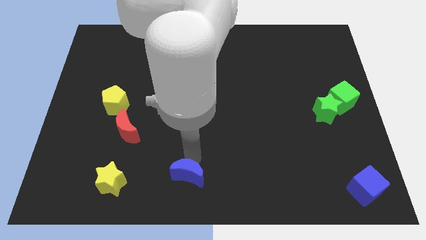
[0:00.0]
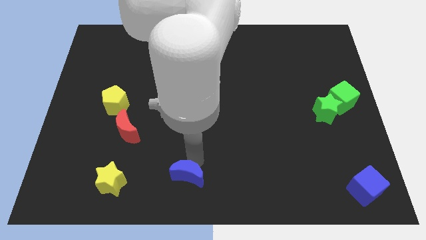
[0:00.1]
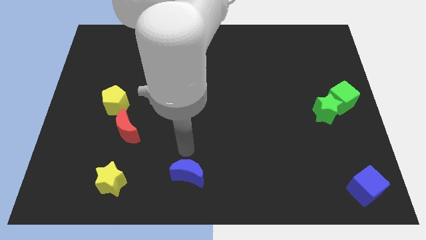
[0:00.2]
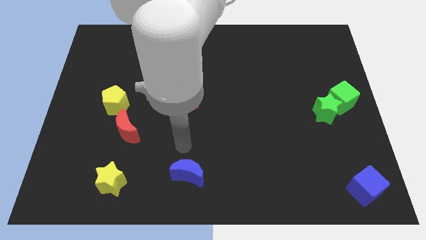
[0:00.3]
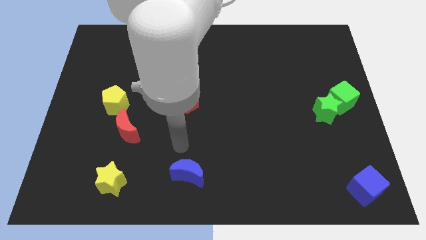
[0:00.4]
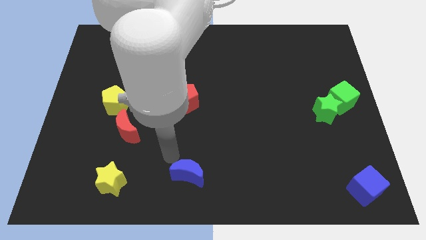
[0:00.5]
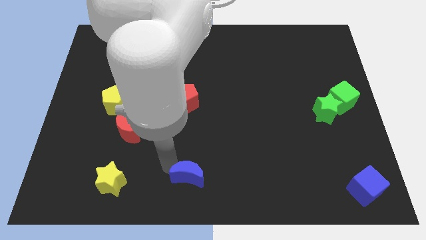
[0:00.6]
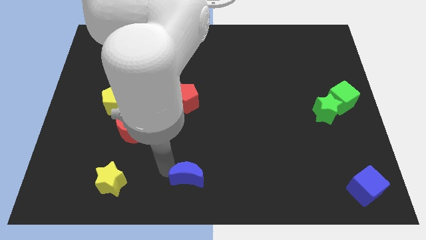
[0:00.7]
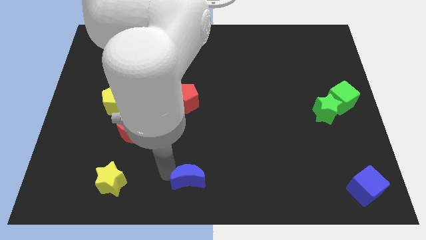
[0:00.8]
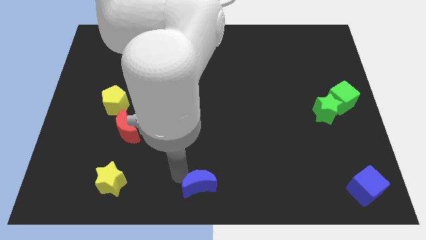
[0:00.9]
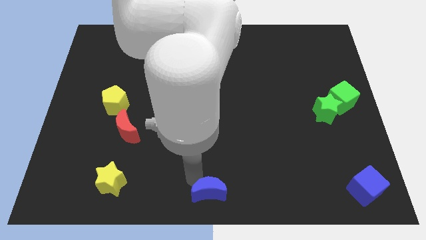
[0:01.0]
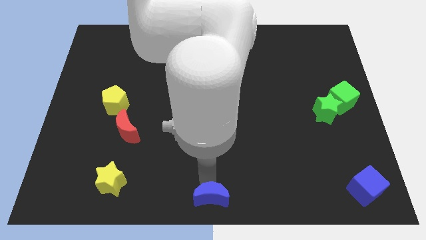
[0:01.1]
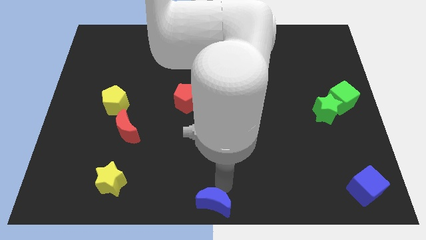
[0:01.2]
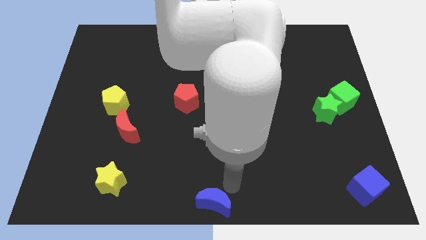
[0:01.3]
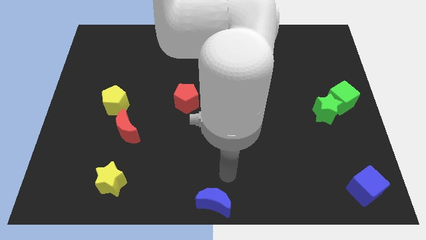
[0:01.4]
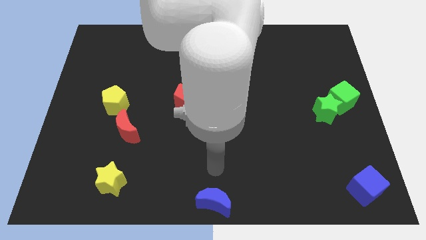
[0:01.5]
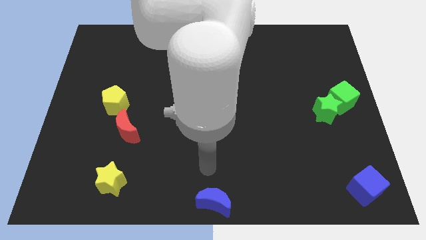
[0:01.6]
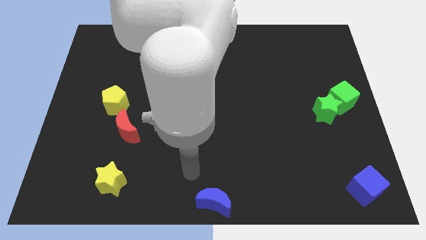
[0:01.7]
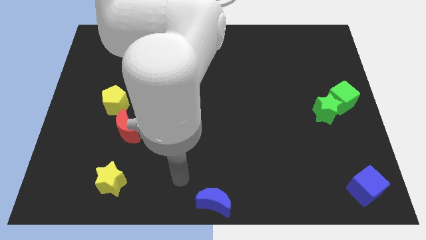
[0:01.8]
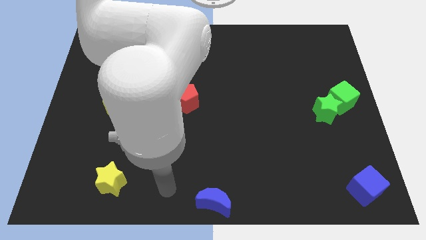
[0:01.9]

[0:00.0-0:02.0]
move the blue crescent to the bottom center of the board

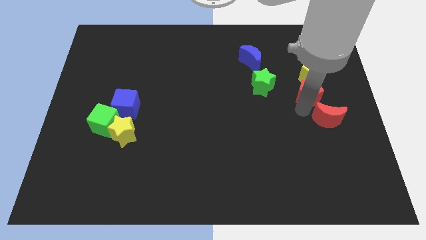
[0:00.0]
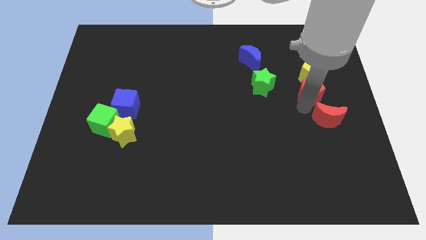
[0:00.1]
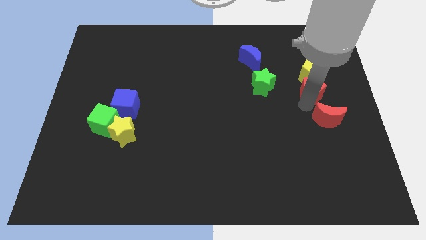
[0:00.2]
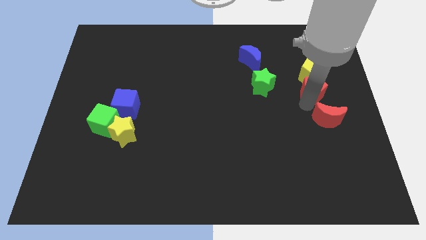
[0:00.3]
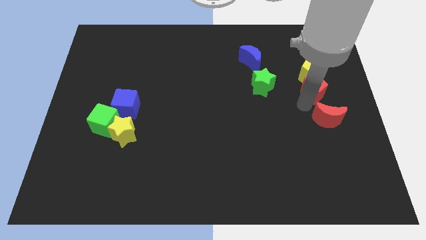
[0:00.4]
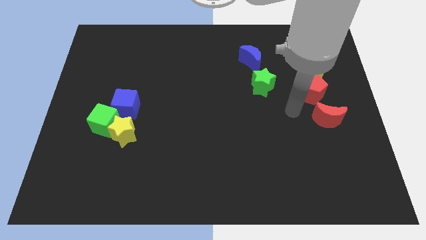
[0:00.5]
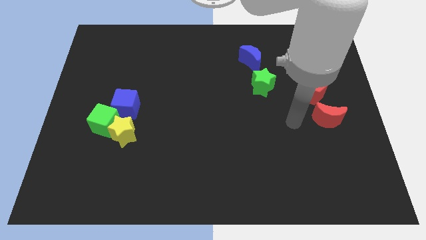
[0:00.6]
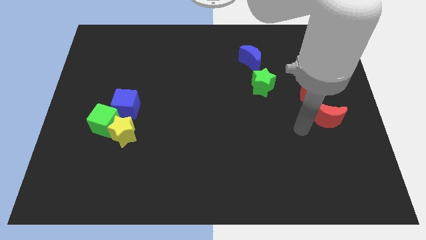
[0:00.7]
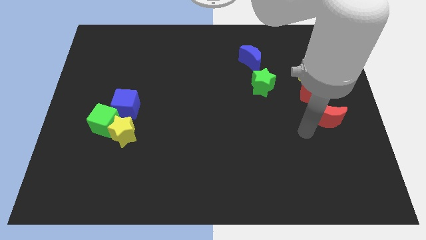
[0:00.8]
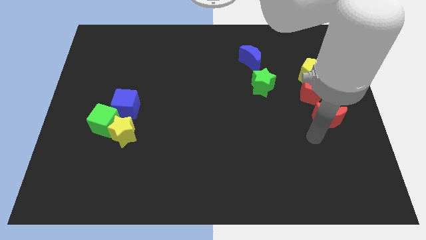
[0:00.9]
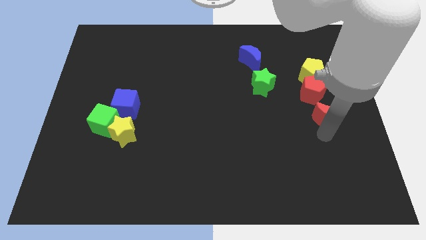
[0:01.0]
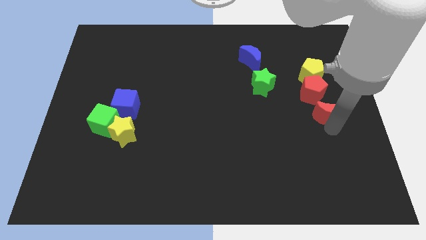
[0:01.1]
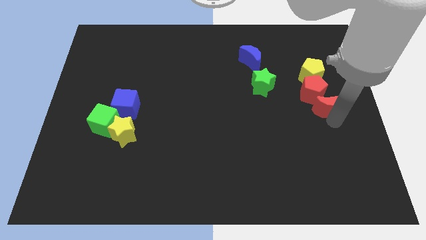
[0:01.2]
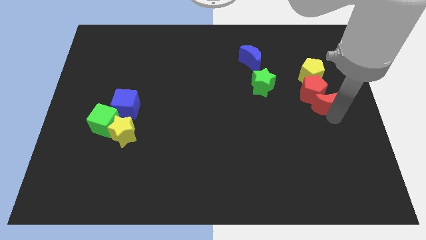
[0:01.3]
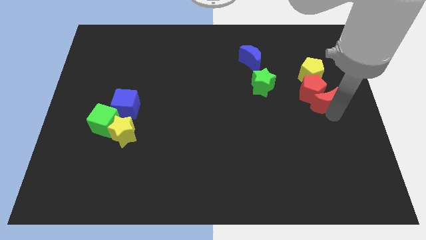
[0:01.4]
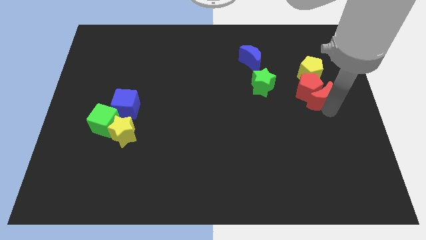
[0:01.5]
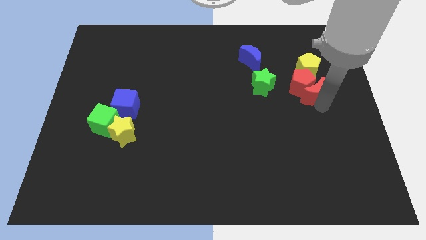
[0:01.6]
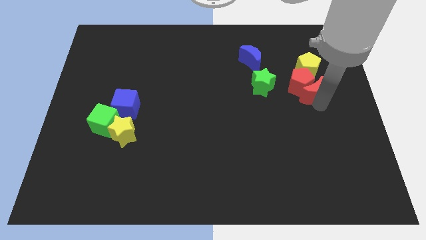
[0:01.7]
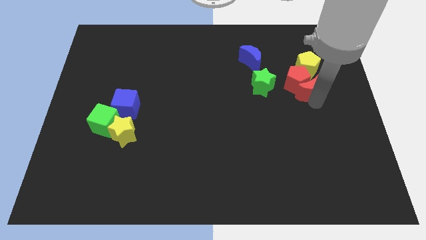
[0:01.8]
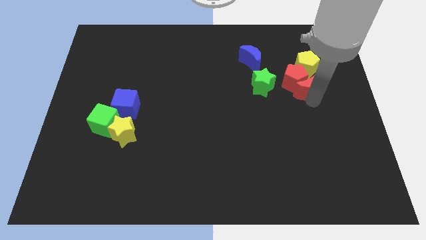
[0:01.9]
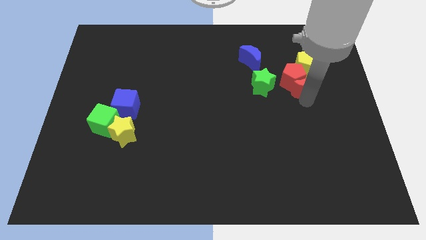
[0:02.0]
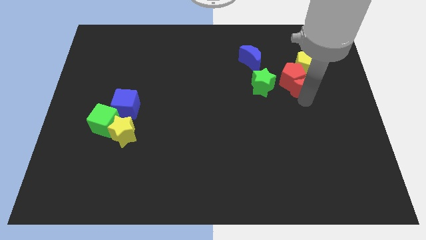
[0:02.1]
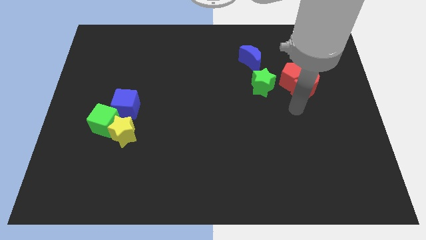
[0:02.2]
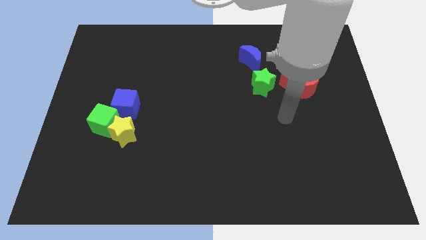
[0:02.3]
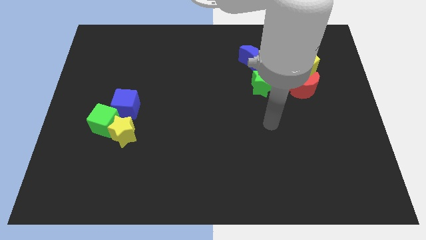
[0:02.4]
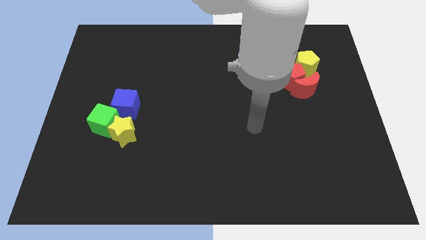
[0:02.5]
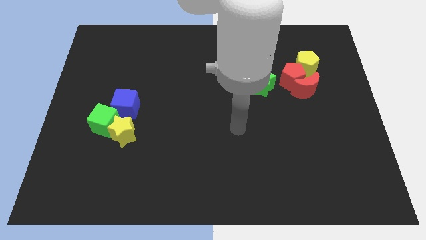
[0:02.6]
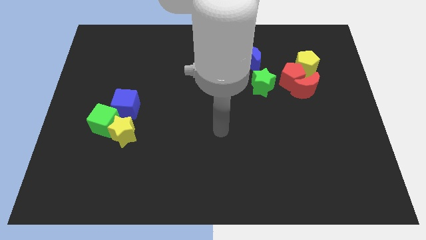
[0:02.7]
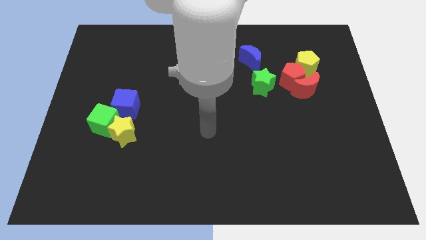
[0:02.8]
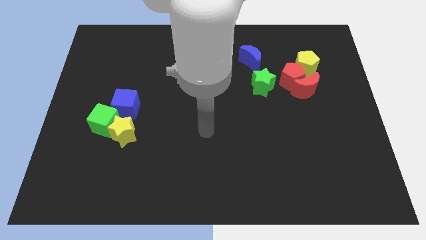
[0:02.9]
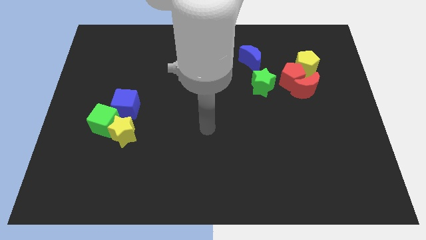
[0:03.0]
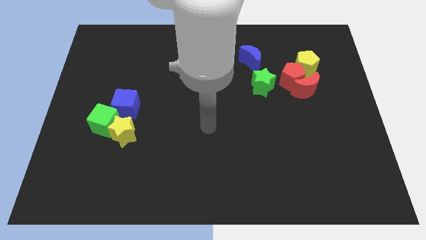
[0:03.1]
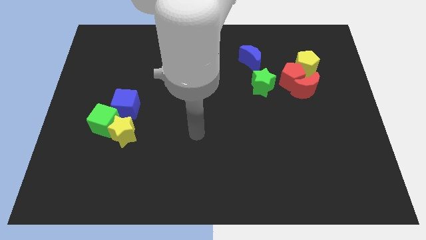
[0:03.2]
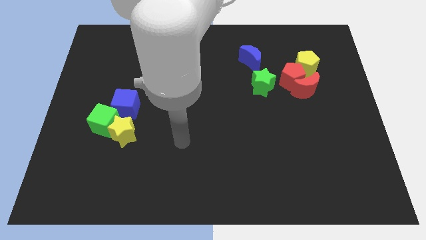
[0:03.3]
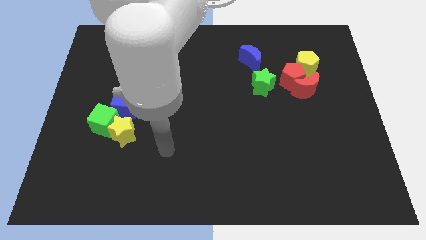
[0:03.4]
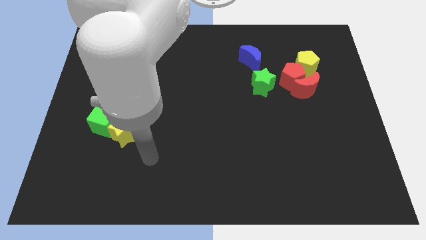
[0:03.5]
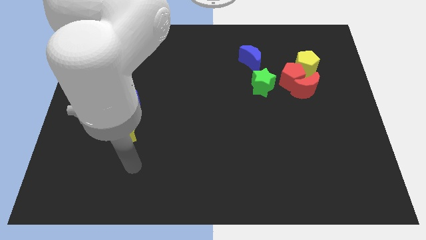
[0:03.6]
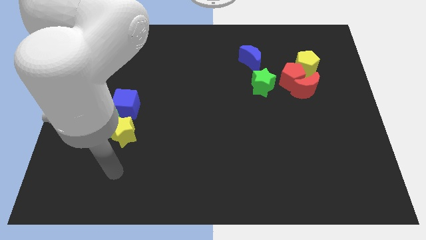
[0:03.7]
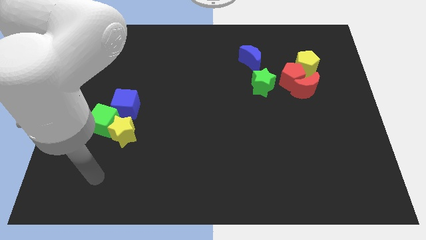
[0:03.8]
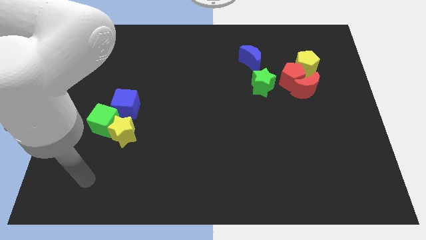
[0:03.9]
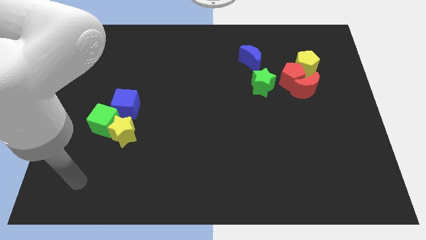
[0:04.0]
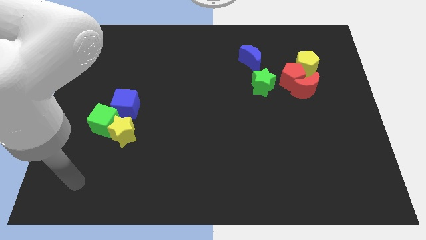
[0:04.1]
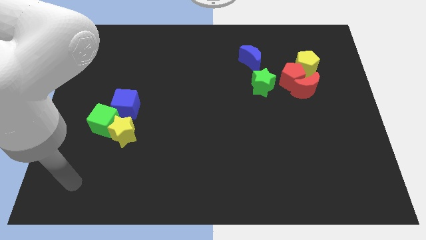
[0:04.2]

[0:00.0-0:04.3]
push the red blocks into the yellow pentagon

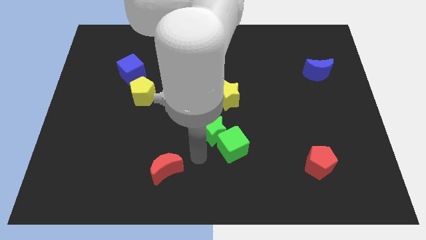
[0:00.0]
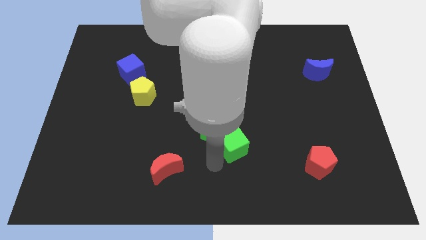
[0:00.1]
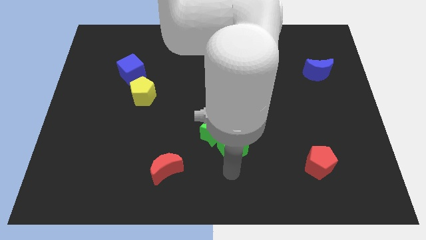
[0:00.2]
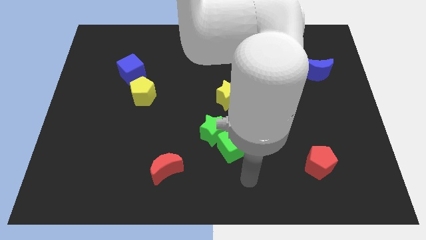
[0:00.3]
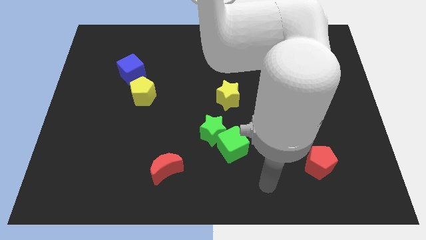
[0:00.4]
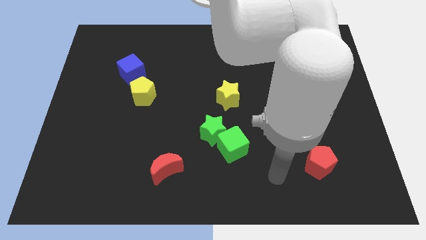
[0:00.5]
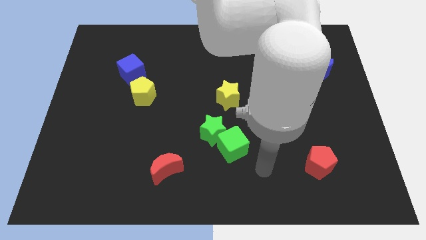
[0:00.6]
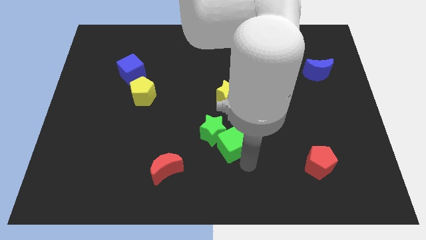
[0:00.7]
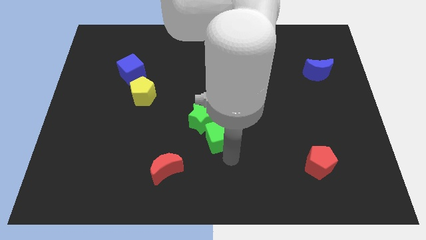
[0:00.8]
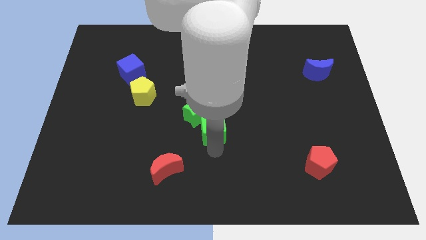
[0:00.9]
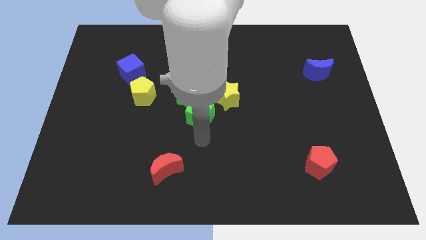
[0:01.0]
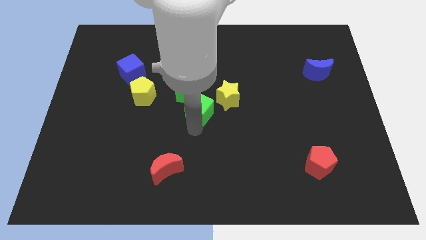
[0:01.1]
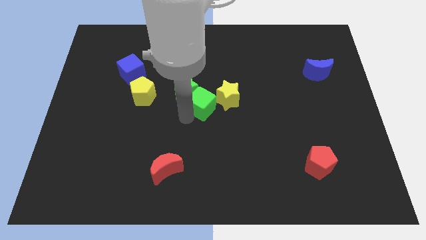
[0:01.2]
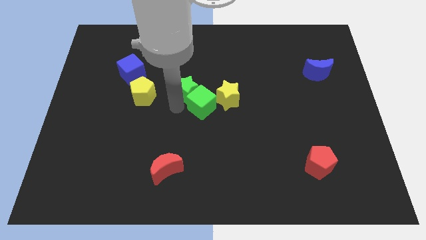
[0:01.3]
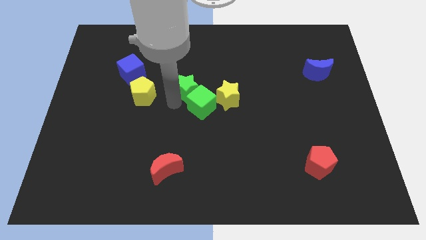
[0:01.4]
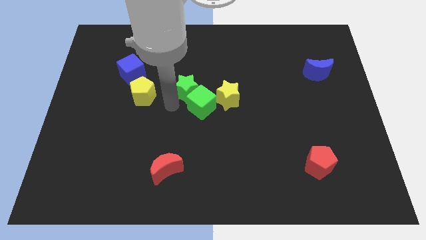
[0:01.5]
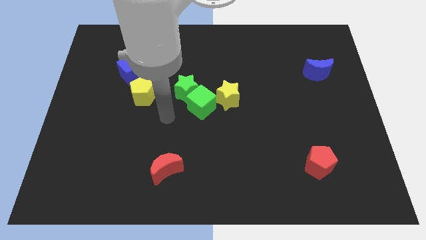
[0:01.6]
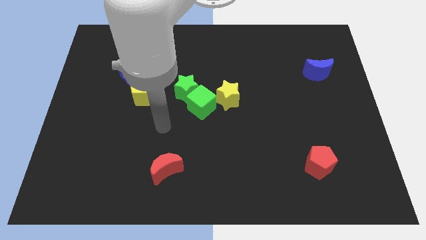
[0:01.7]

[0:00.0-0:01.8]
push the green star with green cube towards the right of the yellow pentagon

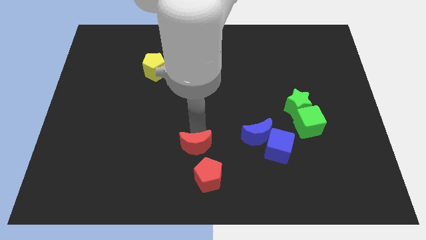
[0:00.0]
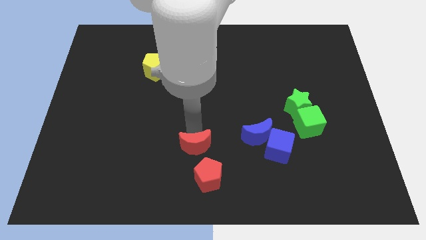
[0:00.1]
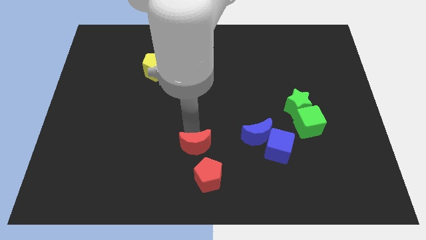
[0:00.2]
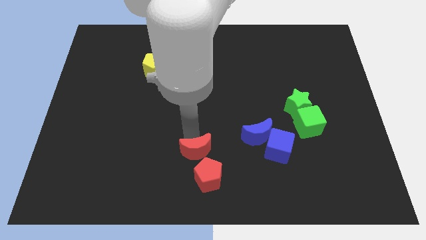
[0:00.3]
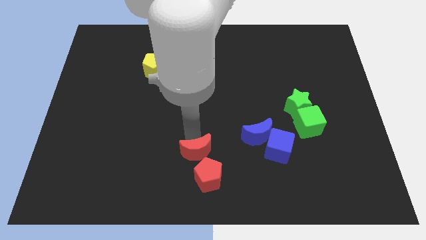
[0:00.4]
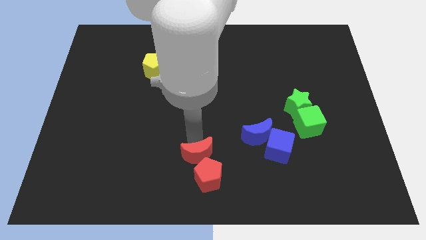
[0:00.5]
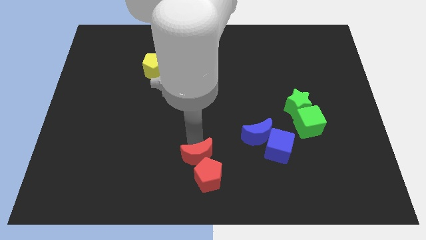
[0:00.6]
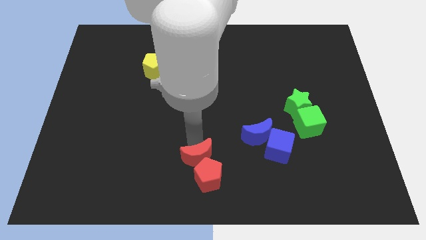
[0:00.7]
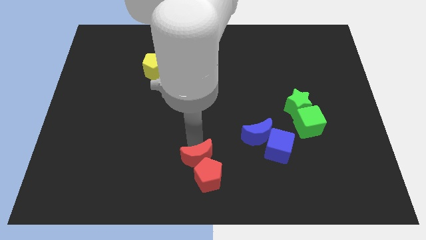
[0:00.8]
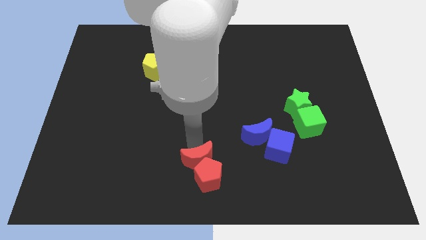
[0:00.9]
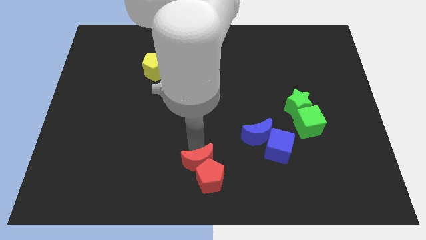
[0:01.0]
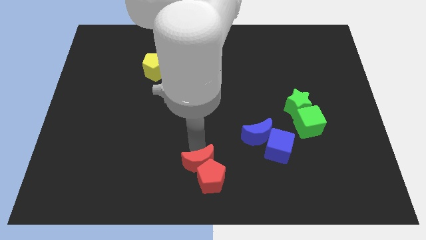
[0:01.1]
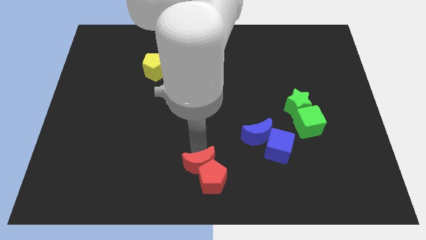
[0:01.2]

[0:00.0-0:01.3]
move red moon into red pentagon
